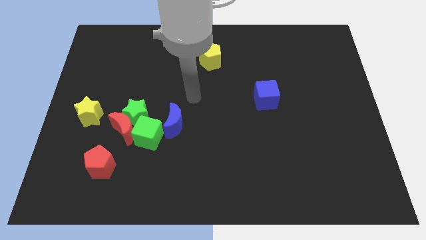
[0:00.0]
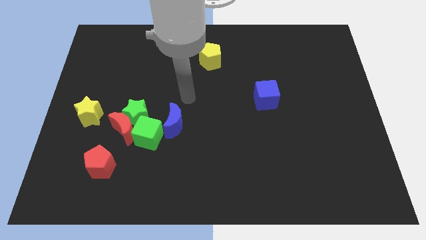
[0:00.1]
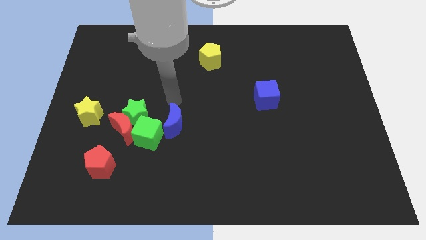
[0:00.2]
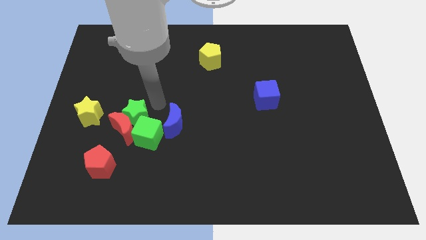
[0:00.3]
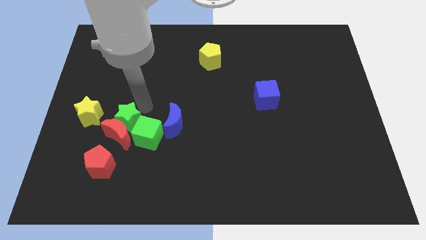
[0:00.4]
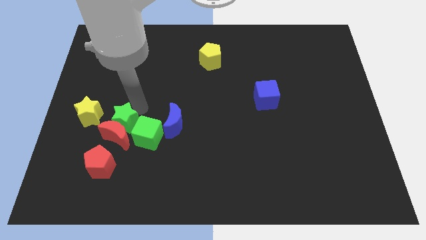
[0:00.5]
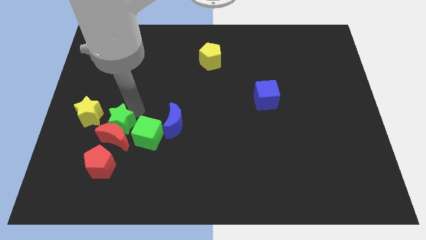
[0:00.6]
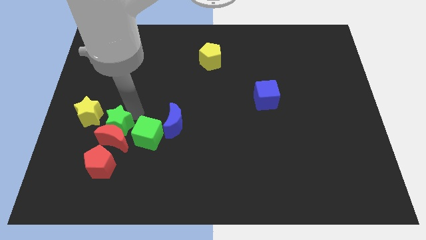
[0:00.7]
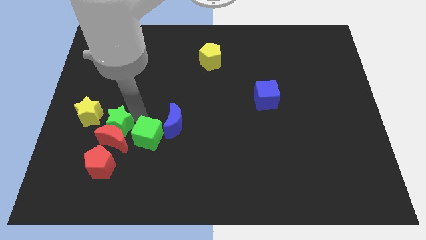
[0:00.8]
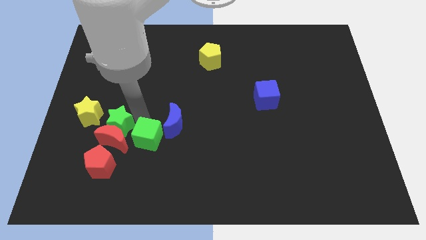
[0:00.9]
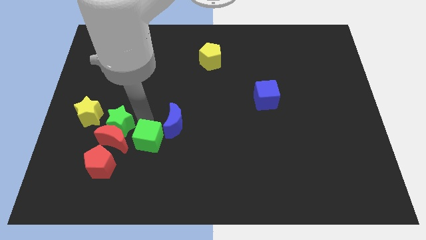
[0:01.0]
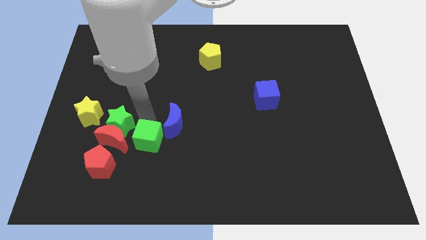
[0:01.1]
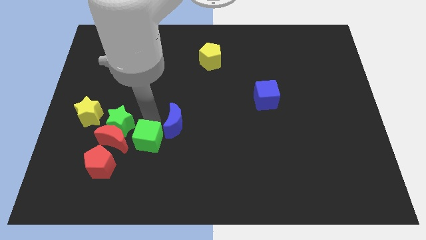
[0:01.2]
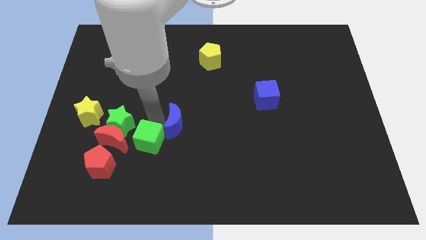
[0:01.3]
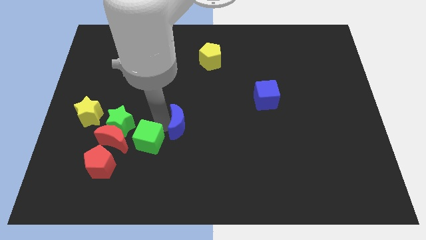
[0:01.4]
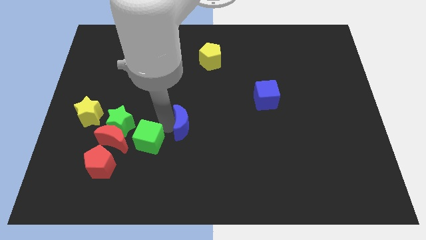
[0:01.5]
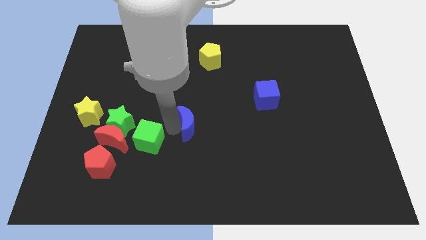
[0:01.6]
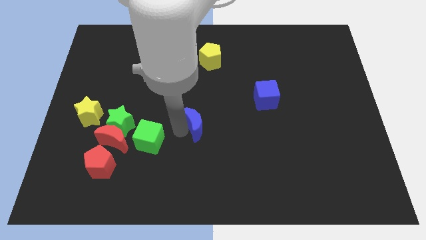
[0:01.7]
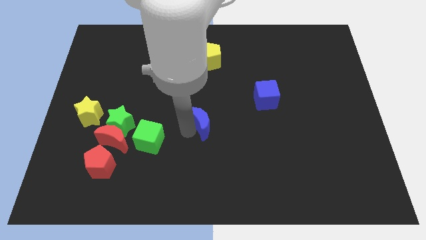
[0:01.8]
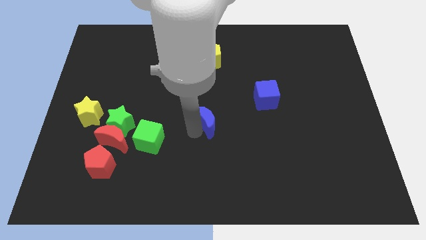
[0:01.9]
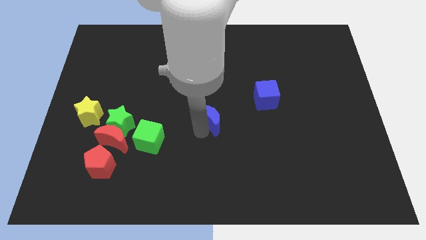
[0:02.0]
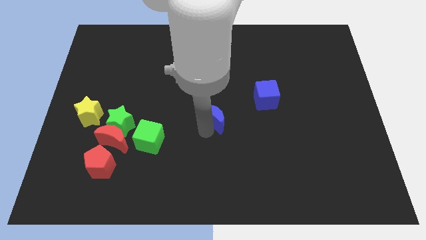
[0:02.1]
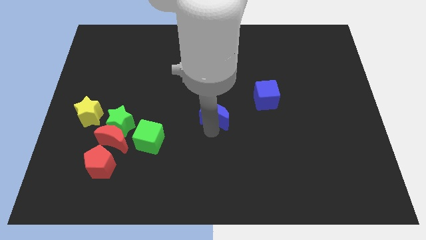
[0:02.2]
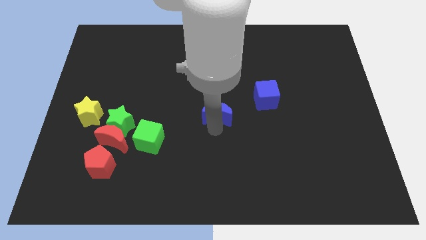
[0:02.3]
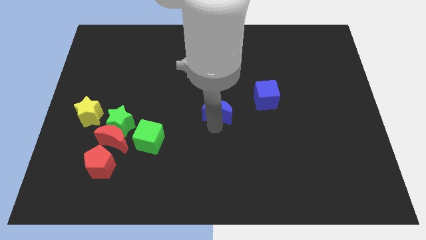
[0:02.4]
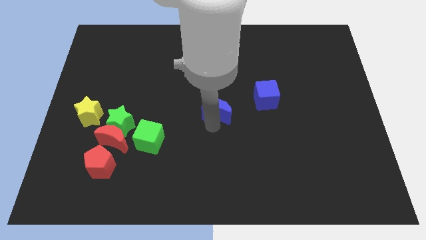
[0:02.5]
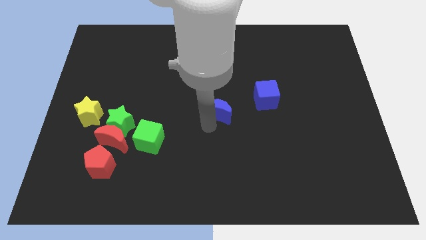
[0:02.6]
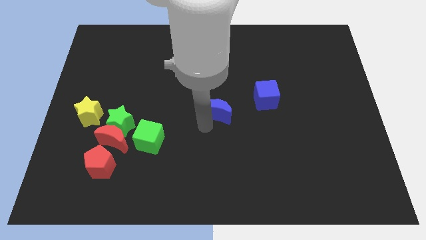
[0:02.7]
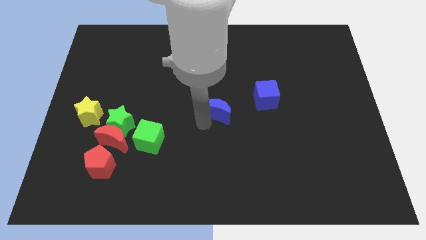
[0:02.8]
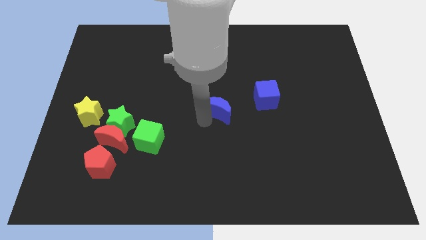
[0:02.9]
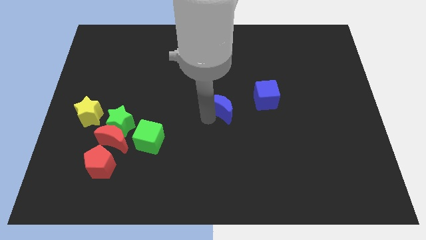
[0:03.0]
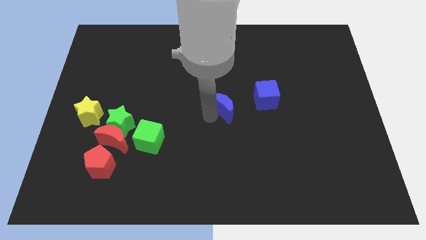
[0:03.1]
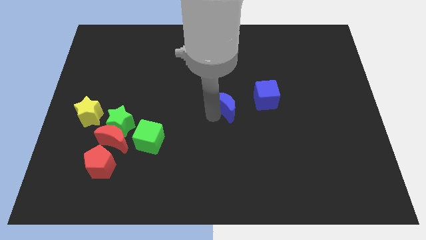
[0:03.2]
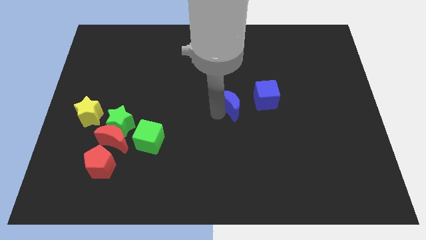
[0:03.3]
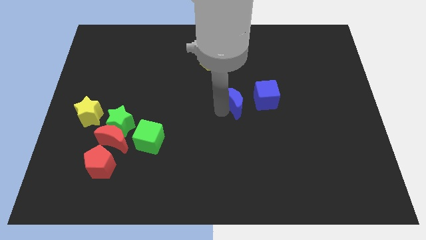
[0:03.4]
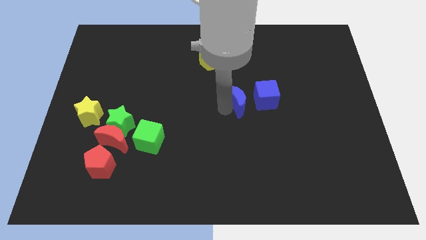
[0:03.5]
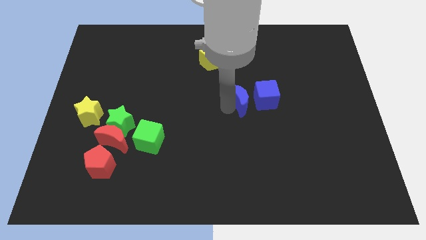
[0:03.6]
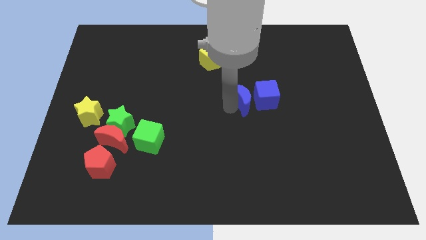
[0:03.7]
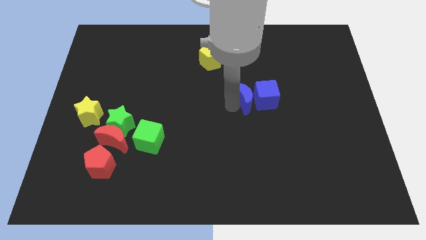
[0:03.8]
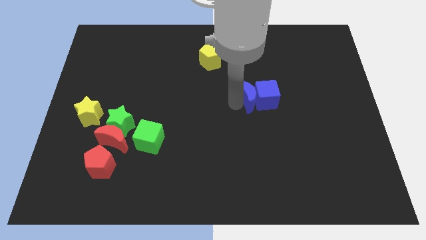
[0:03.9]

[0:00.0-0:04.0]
push the blue moon towards the blue cube

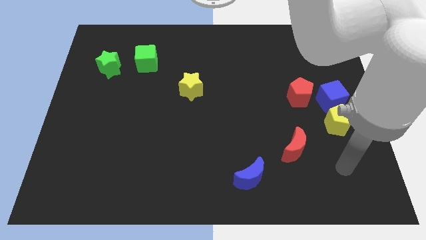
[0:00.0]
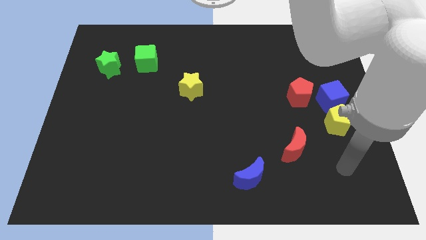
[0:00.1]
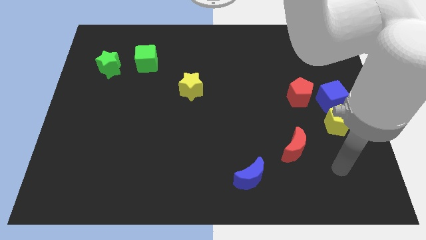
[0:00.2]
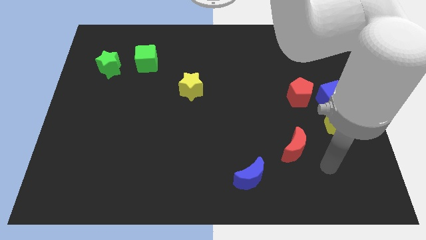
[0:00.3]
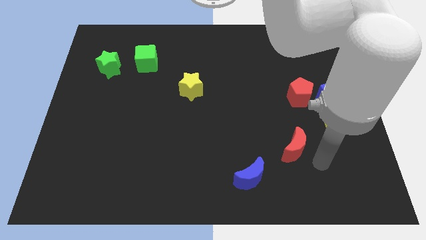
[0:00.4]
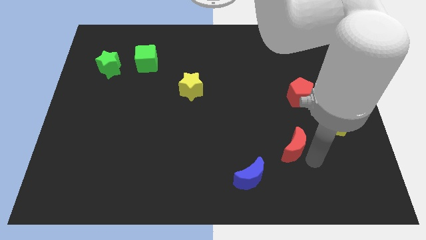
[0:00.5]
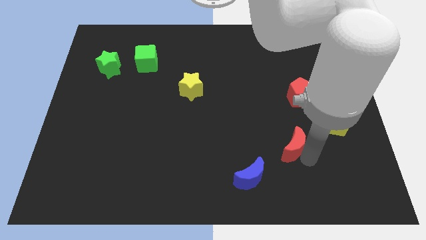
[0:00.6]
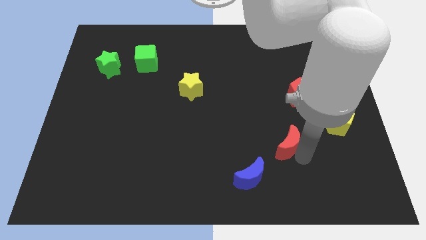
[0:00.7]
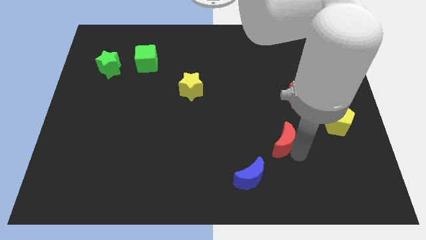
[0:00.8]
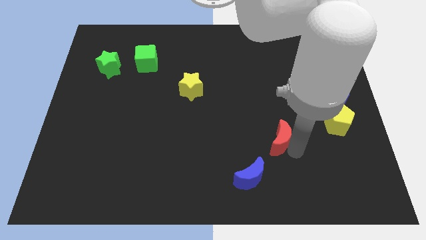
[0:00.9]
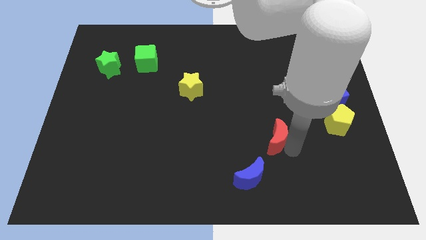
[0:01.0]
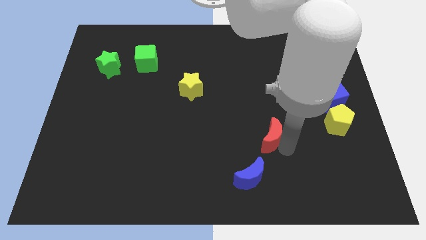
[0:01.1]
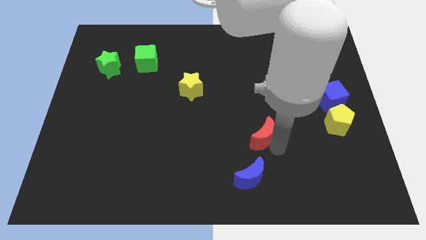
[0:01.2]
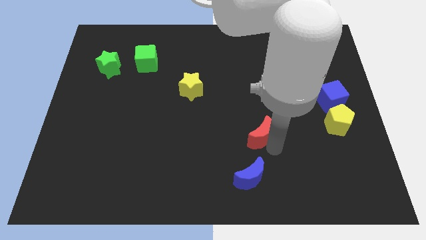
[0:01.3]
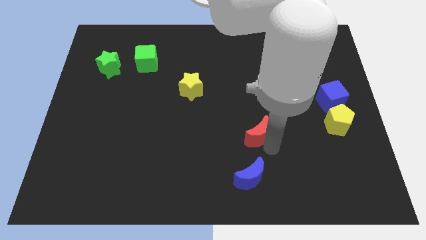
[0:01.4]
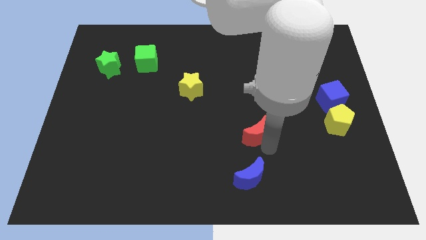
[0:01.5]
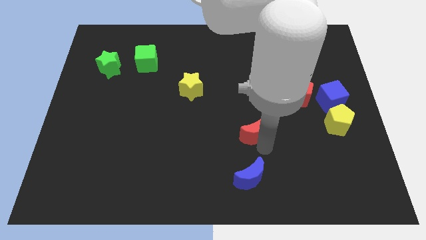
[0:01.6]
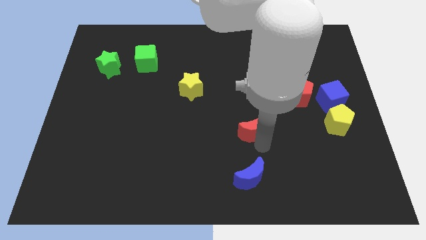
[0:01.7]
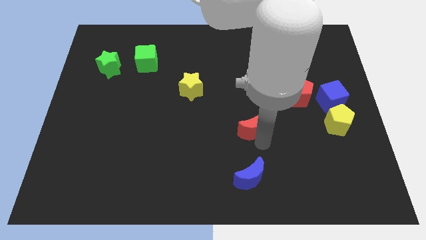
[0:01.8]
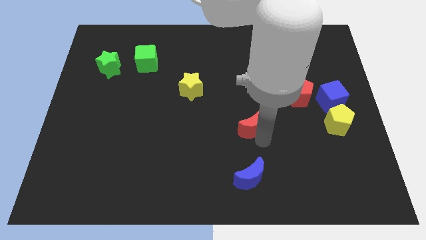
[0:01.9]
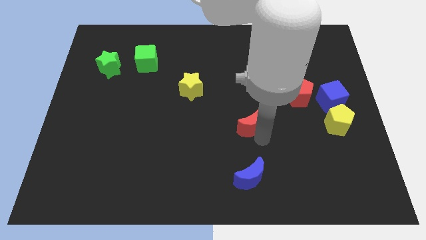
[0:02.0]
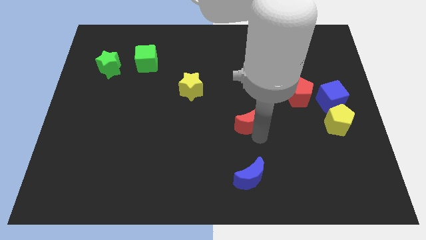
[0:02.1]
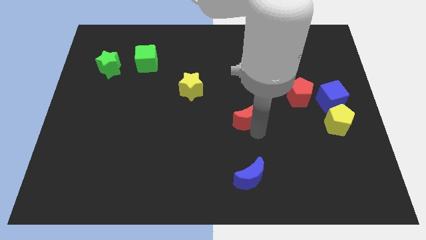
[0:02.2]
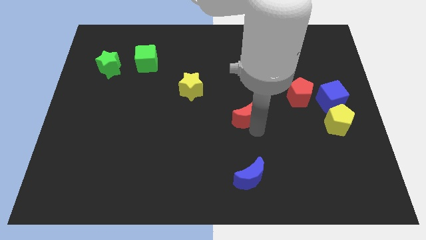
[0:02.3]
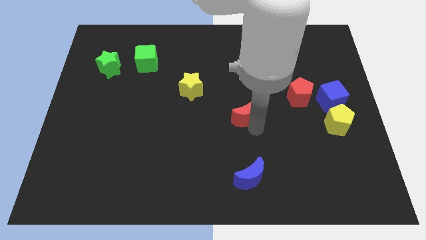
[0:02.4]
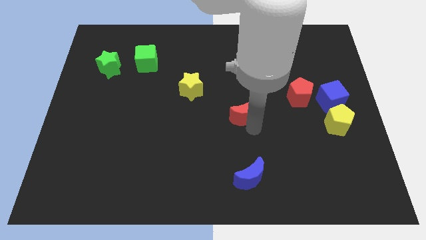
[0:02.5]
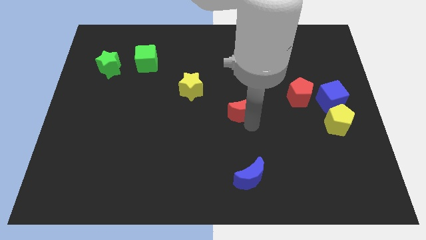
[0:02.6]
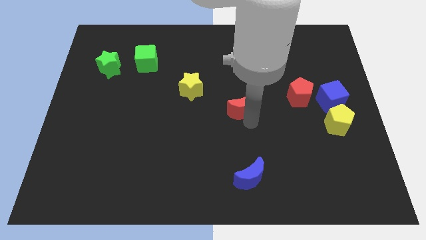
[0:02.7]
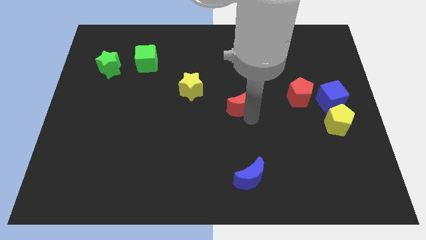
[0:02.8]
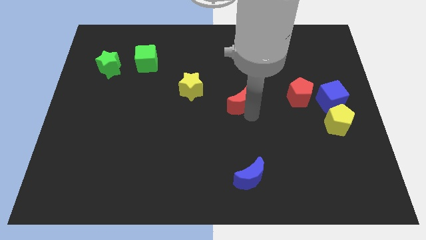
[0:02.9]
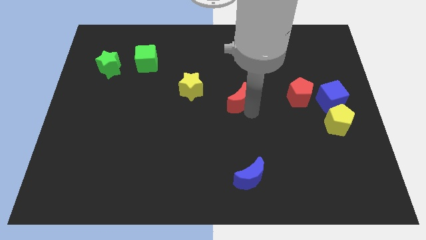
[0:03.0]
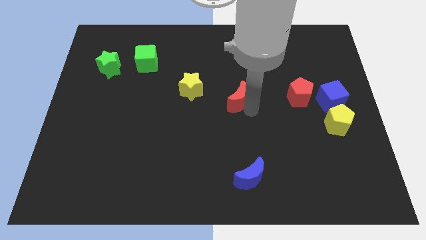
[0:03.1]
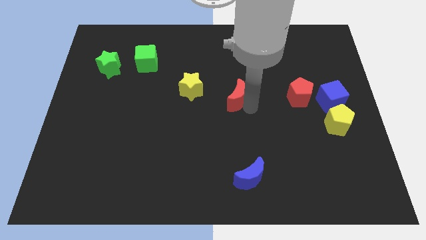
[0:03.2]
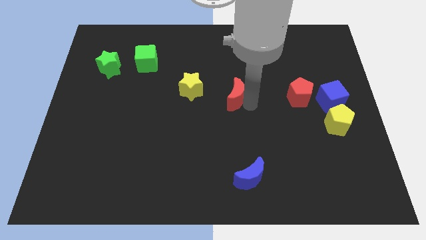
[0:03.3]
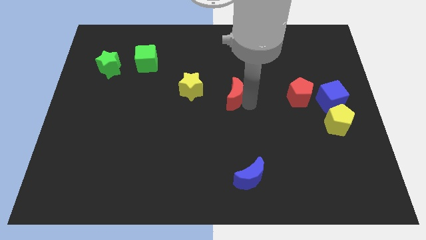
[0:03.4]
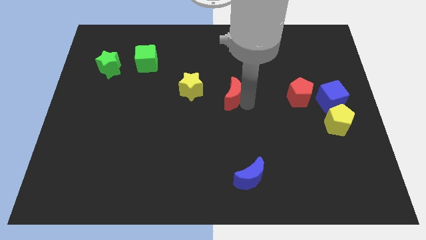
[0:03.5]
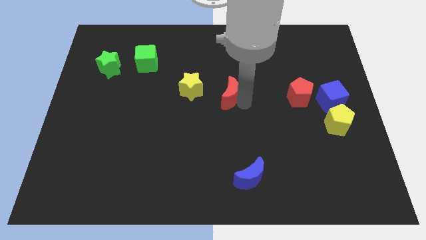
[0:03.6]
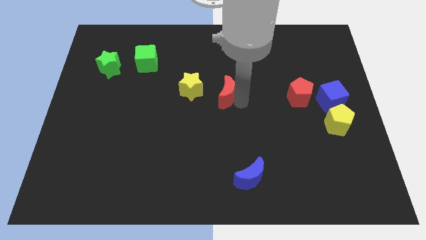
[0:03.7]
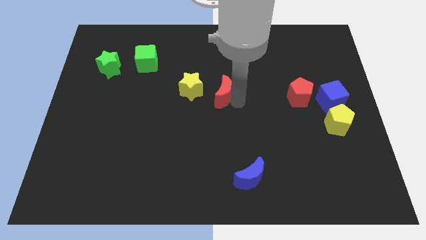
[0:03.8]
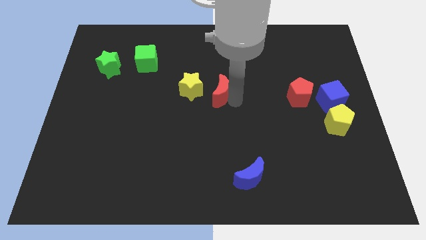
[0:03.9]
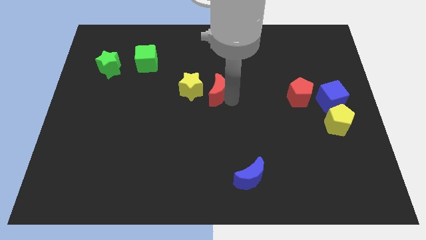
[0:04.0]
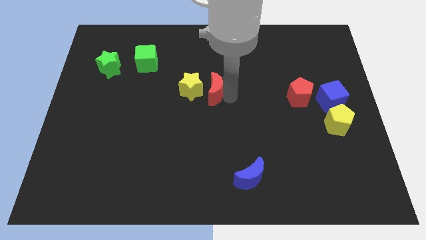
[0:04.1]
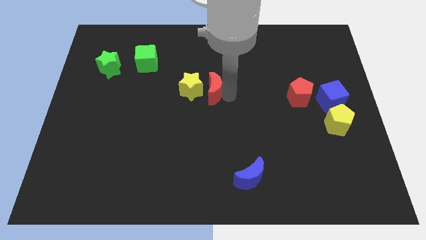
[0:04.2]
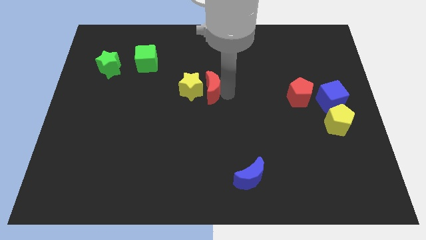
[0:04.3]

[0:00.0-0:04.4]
move the red moon close to the yellow star

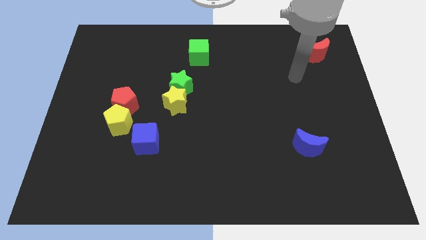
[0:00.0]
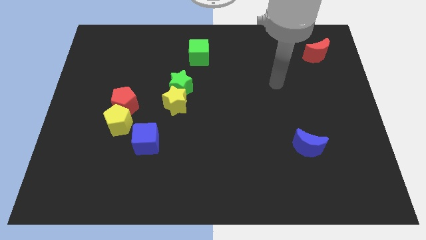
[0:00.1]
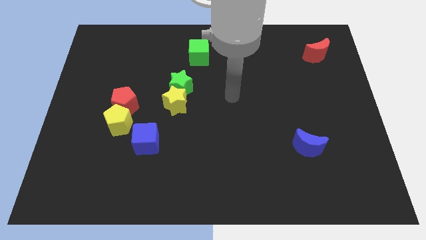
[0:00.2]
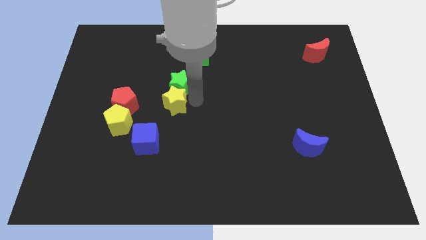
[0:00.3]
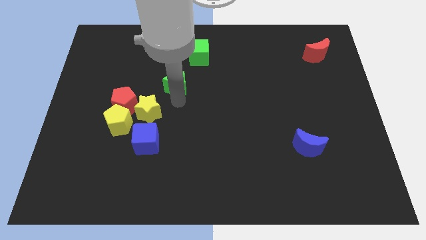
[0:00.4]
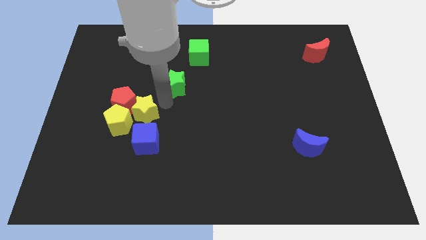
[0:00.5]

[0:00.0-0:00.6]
move the yellow star next to the red pentagon
